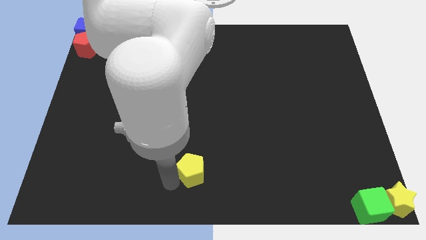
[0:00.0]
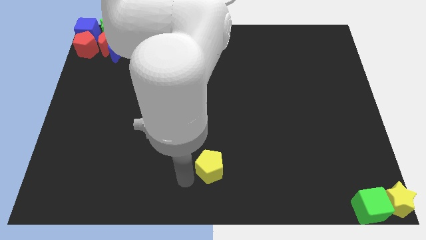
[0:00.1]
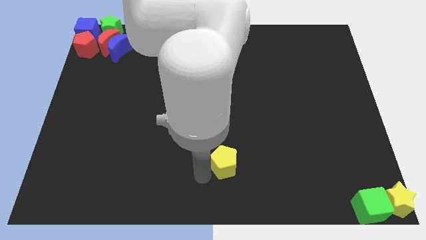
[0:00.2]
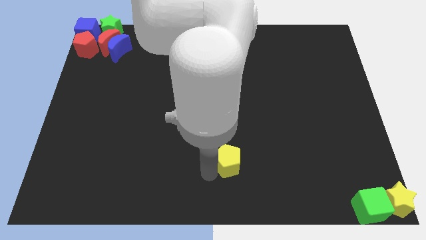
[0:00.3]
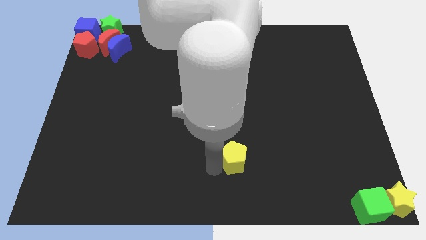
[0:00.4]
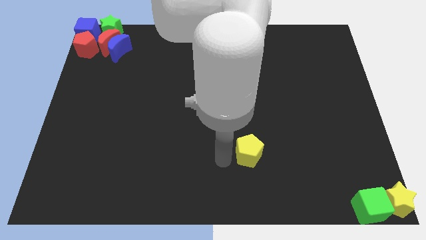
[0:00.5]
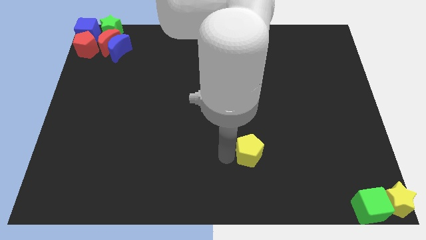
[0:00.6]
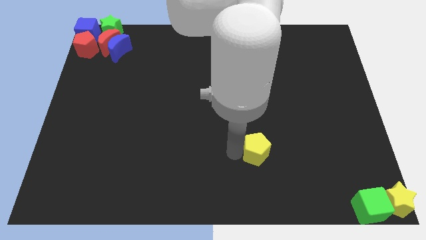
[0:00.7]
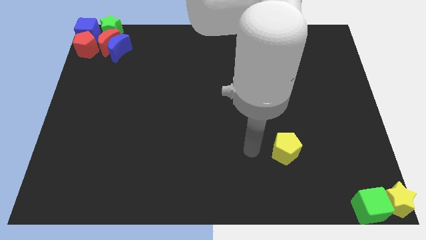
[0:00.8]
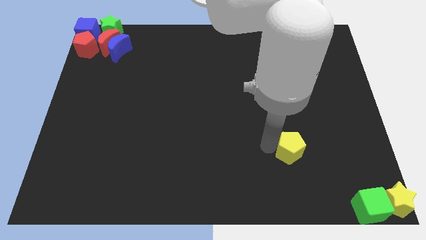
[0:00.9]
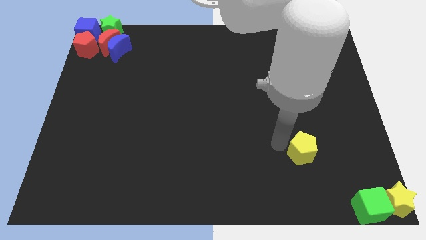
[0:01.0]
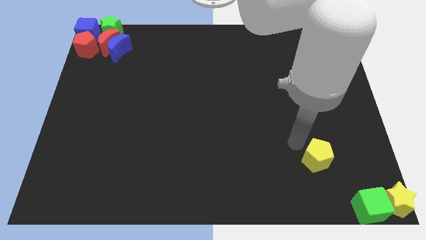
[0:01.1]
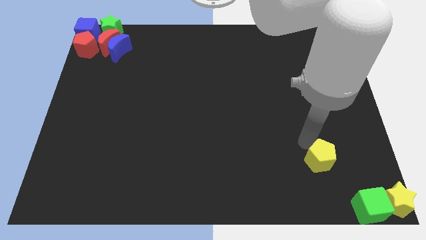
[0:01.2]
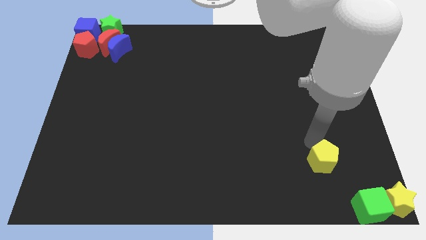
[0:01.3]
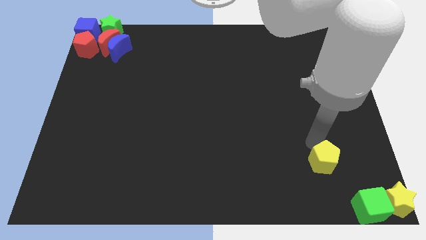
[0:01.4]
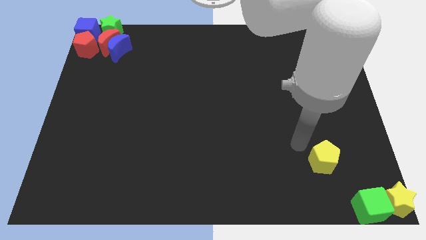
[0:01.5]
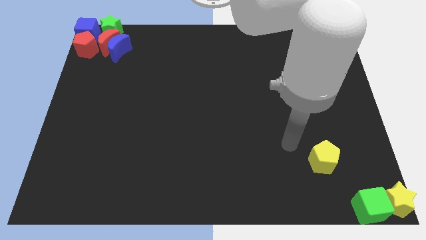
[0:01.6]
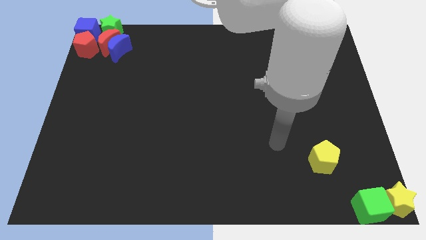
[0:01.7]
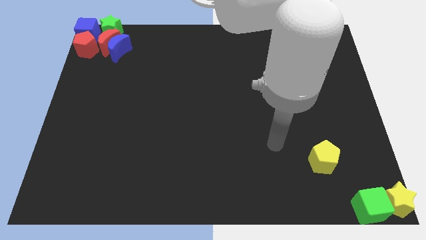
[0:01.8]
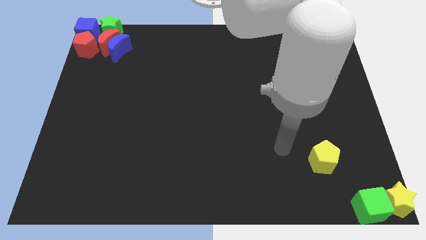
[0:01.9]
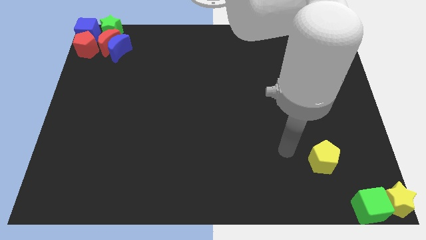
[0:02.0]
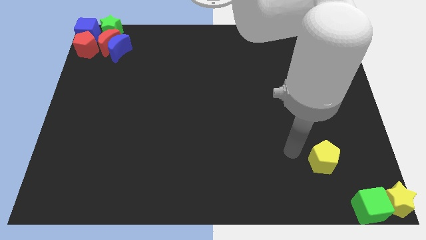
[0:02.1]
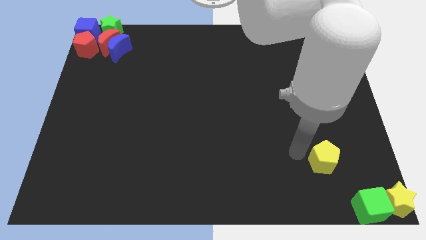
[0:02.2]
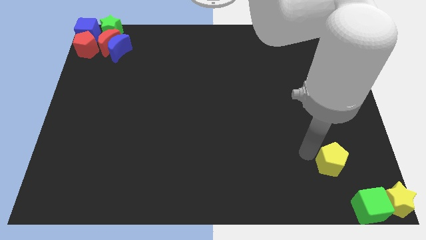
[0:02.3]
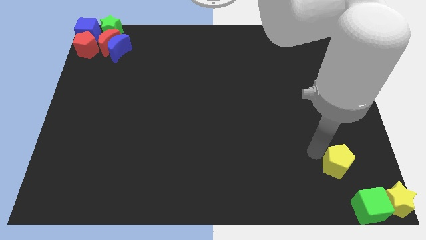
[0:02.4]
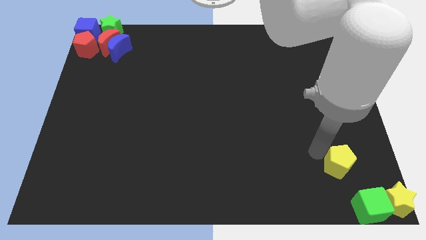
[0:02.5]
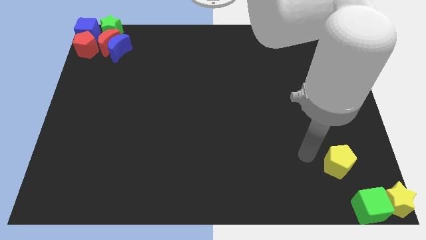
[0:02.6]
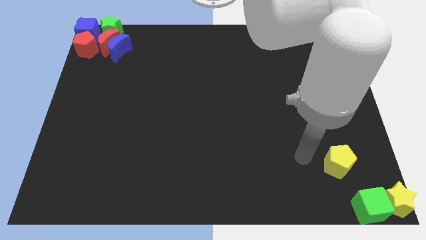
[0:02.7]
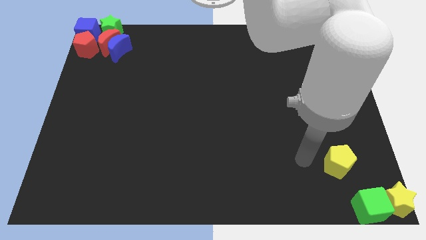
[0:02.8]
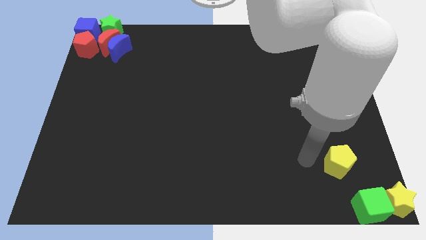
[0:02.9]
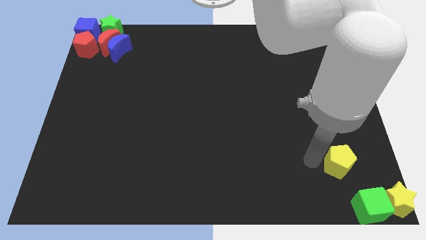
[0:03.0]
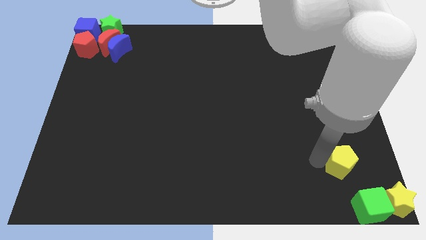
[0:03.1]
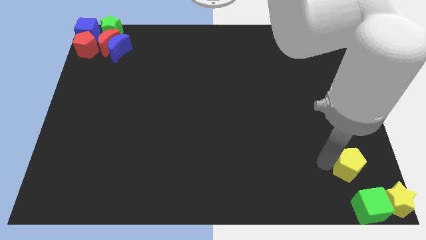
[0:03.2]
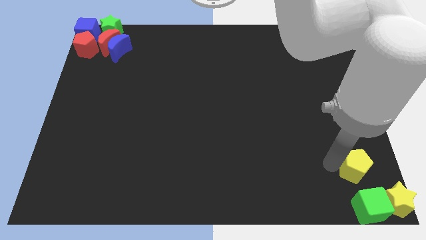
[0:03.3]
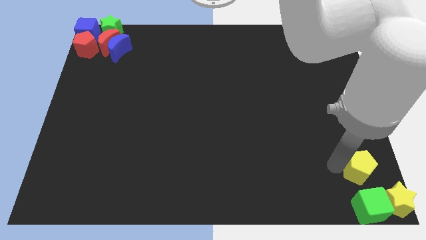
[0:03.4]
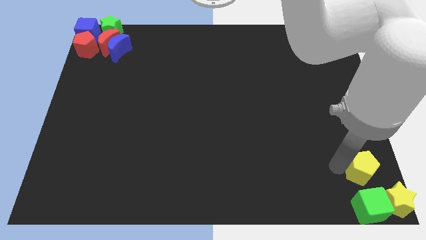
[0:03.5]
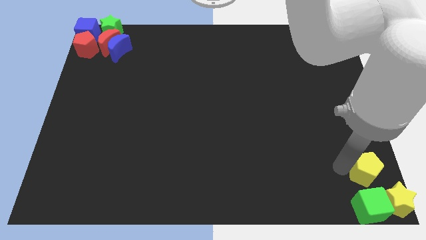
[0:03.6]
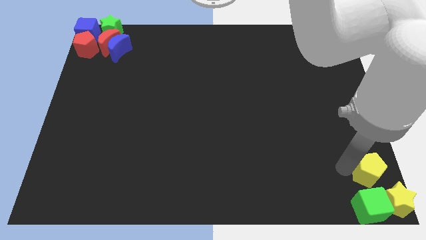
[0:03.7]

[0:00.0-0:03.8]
push the yellow pentagon vertically above the green cube

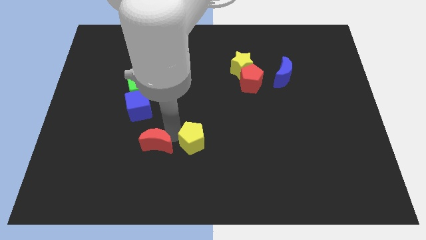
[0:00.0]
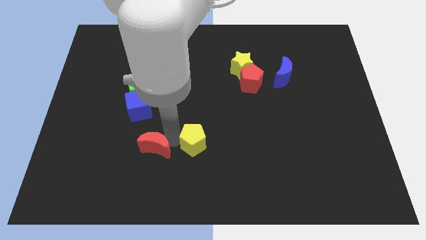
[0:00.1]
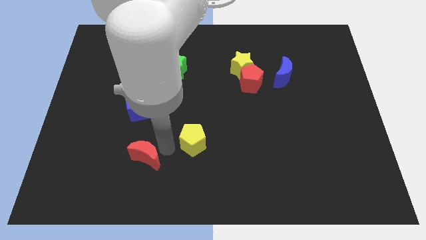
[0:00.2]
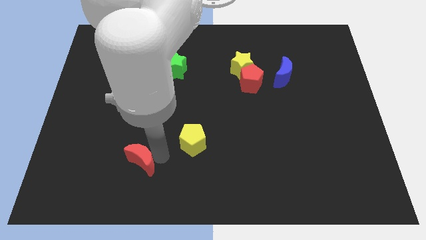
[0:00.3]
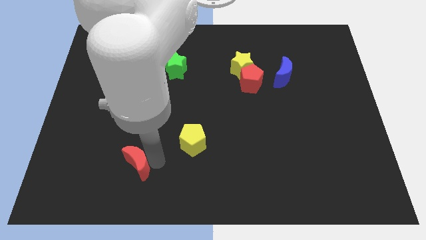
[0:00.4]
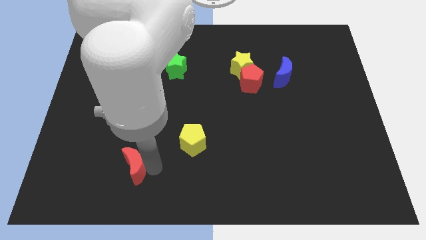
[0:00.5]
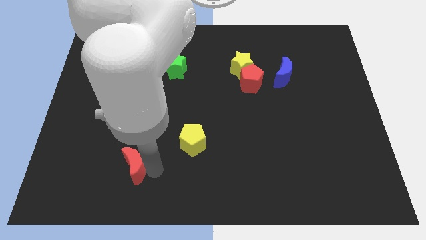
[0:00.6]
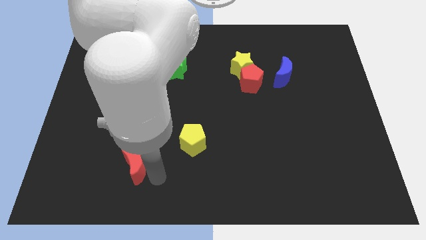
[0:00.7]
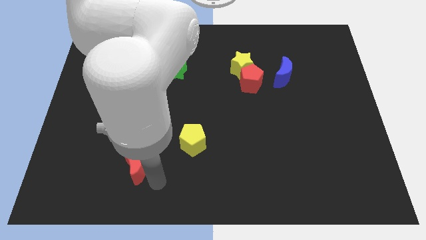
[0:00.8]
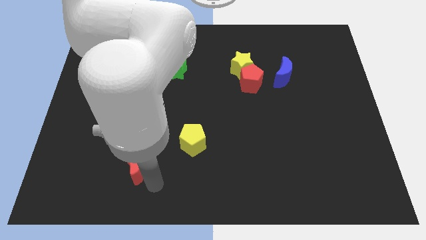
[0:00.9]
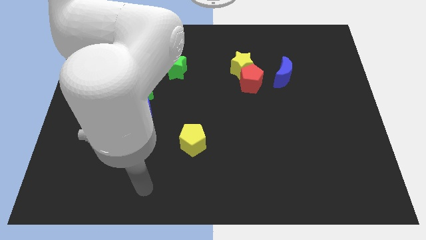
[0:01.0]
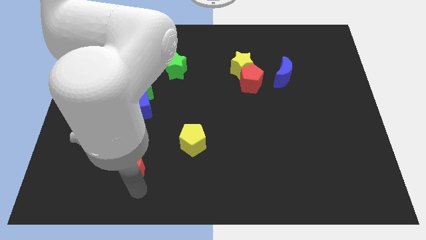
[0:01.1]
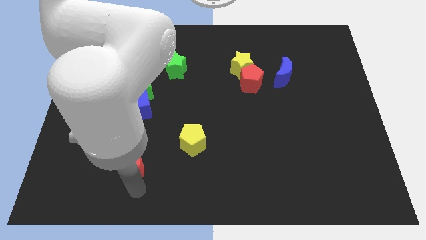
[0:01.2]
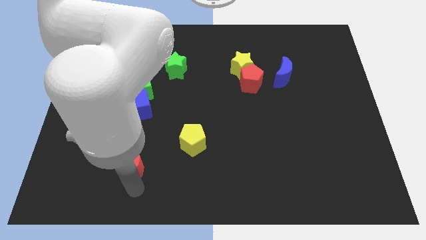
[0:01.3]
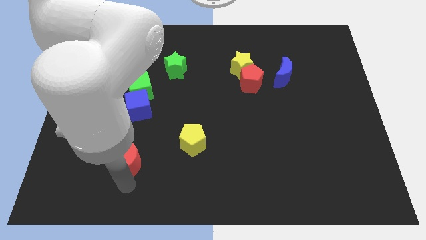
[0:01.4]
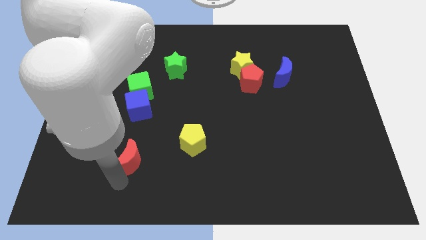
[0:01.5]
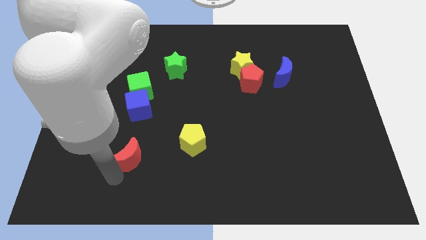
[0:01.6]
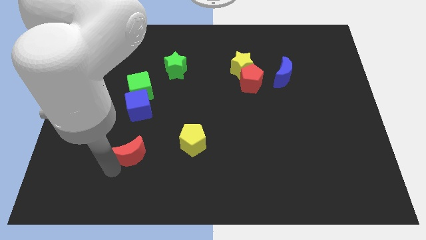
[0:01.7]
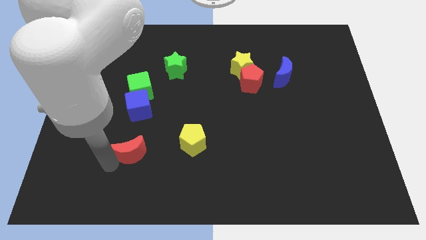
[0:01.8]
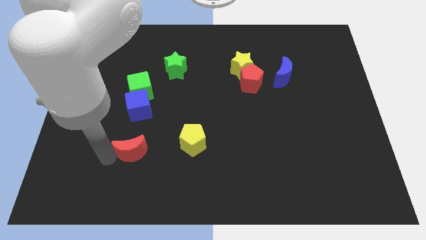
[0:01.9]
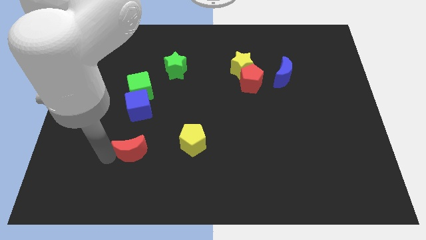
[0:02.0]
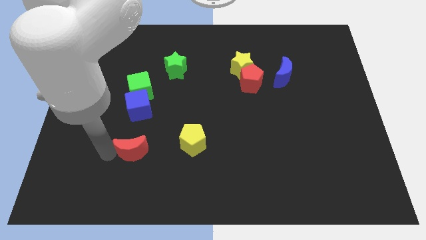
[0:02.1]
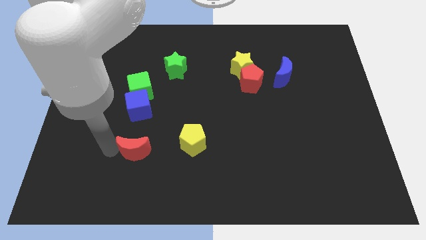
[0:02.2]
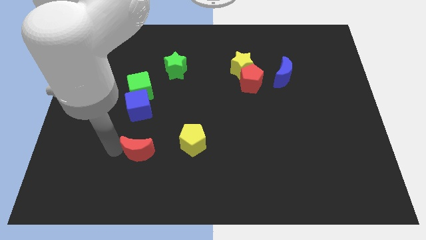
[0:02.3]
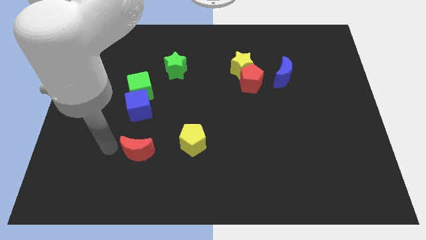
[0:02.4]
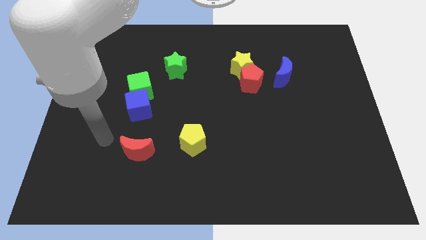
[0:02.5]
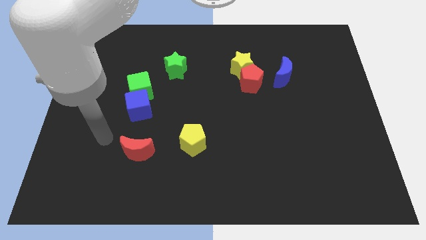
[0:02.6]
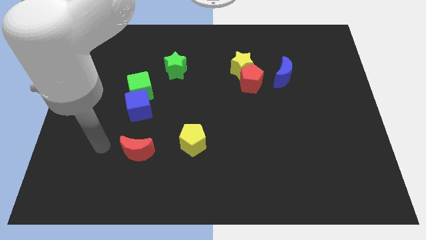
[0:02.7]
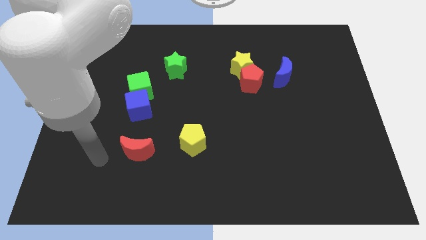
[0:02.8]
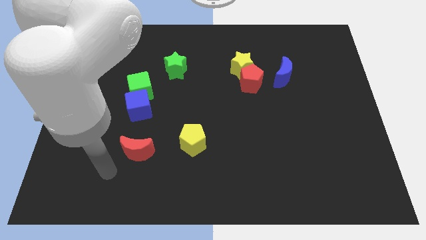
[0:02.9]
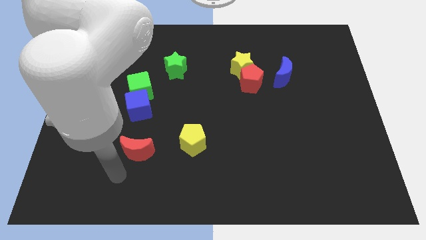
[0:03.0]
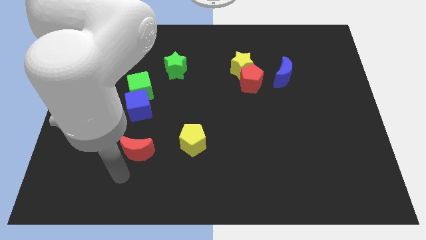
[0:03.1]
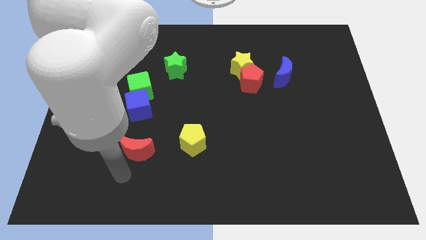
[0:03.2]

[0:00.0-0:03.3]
push the red crescent underneath the green and blue cubes

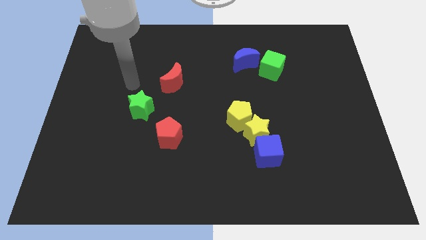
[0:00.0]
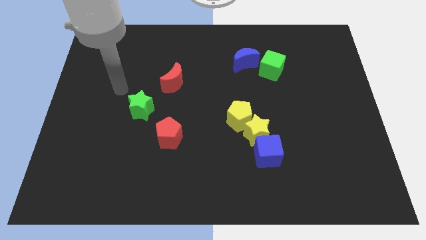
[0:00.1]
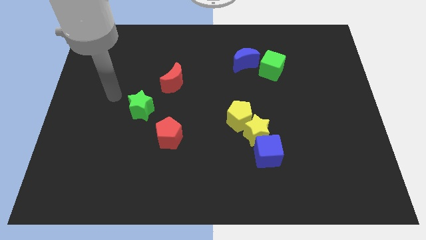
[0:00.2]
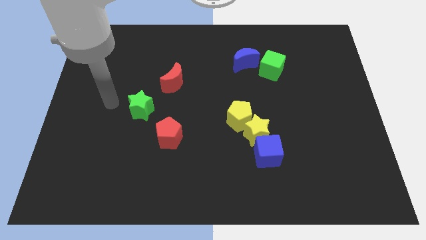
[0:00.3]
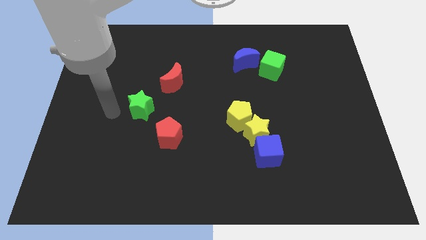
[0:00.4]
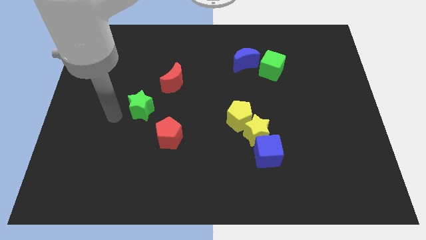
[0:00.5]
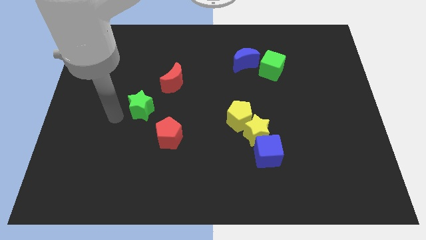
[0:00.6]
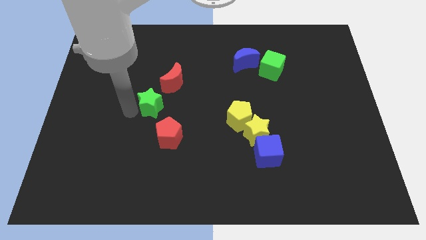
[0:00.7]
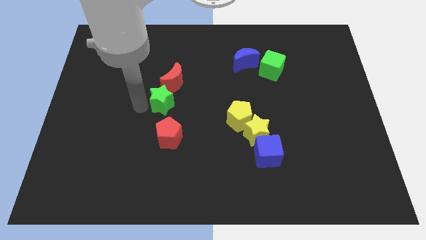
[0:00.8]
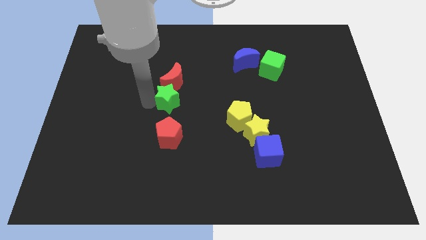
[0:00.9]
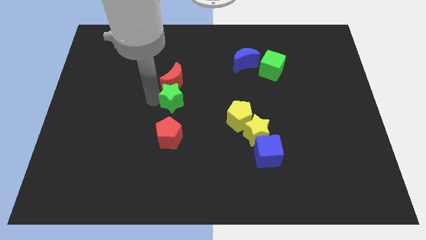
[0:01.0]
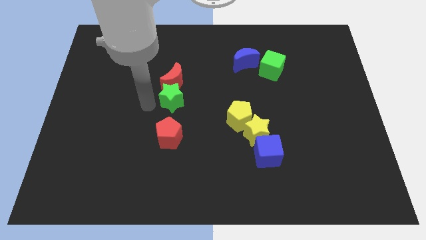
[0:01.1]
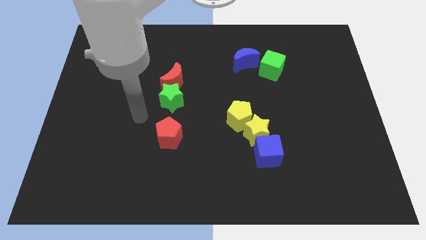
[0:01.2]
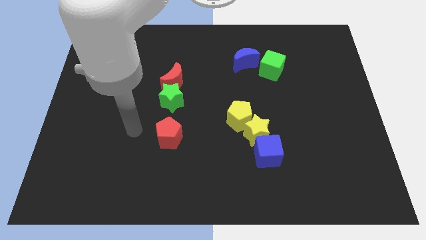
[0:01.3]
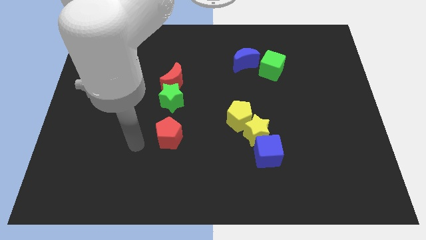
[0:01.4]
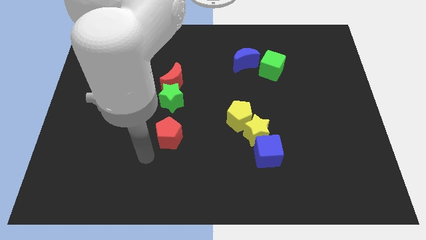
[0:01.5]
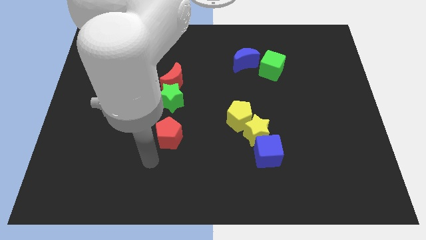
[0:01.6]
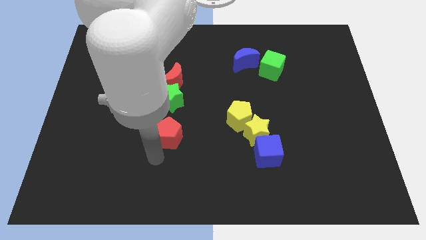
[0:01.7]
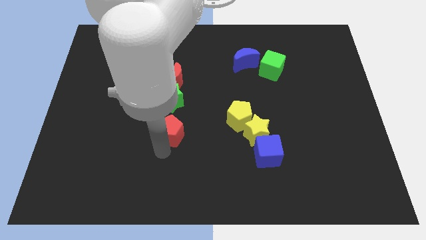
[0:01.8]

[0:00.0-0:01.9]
move green star below red moon

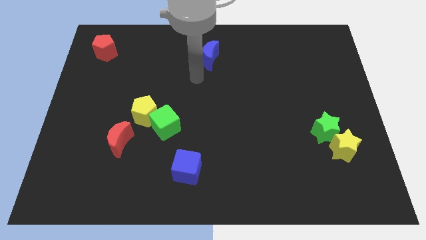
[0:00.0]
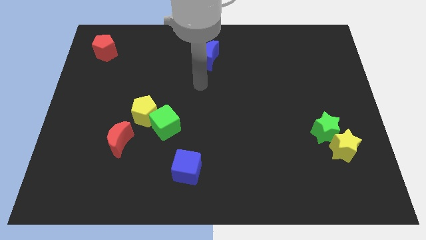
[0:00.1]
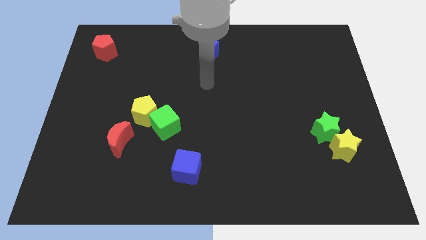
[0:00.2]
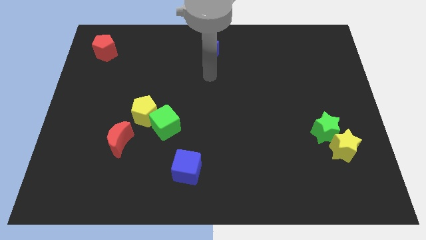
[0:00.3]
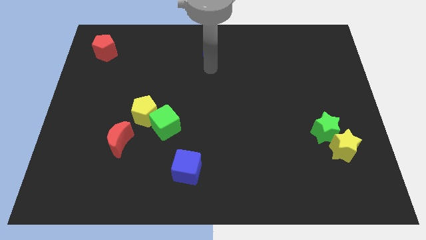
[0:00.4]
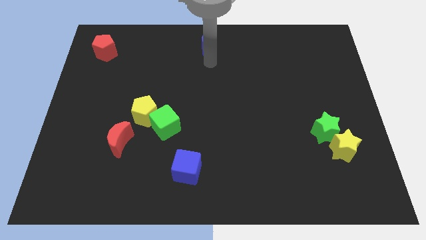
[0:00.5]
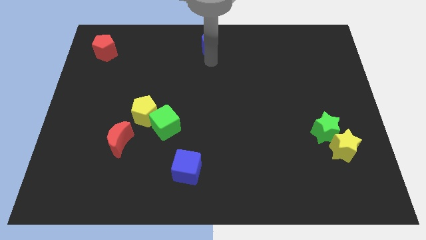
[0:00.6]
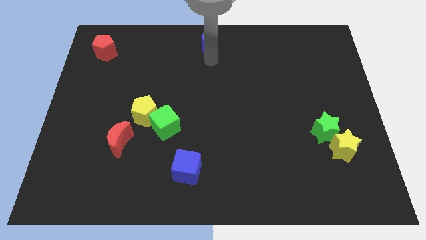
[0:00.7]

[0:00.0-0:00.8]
place blue crescent on the top center of the board
